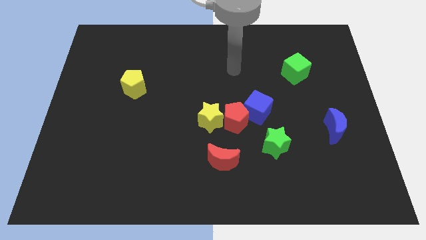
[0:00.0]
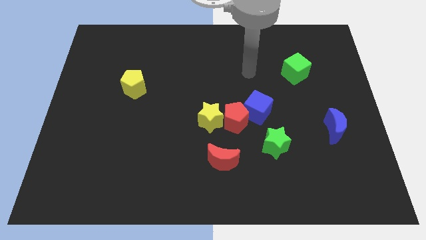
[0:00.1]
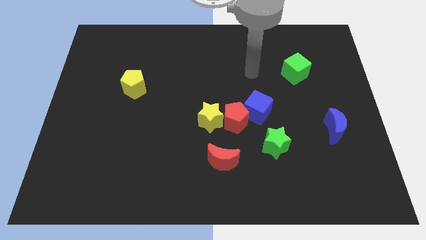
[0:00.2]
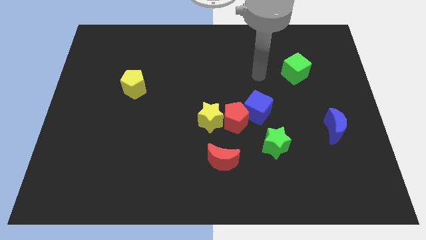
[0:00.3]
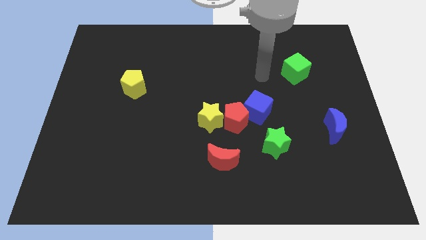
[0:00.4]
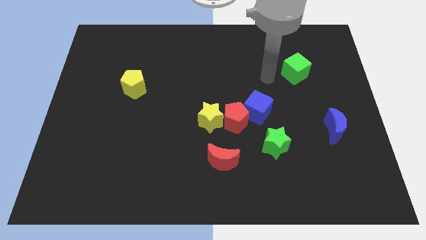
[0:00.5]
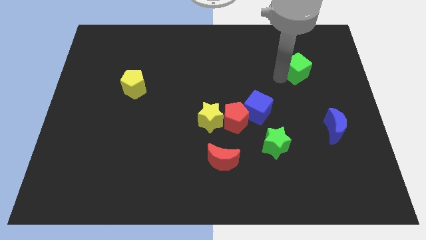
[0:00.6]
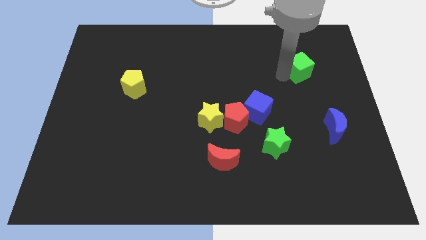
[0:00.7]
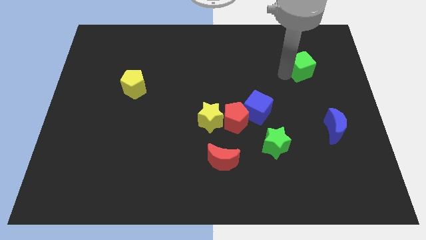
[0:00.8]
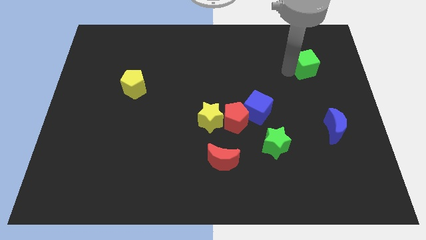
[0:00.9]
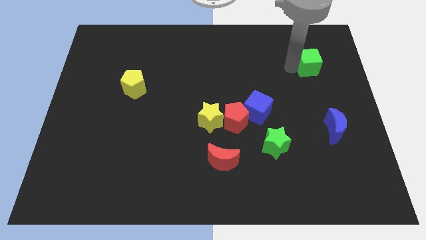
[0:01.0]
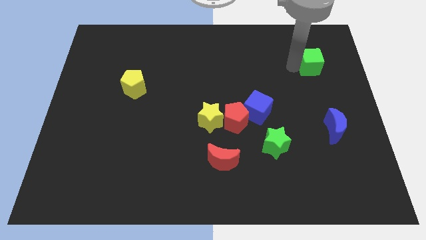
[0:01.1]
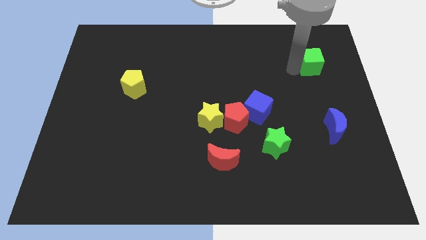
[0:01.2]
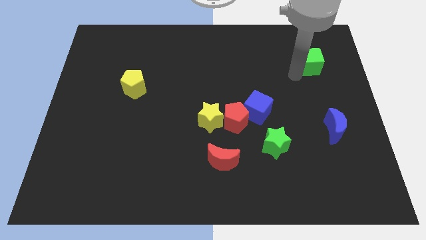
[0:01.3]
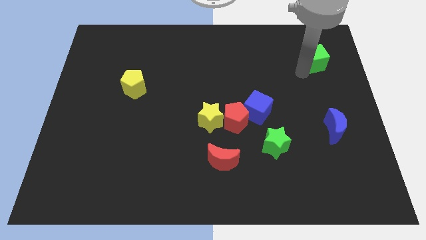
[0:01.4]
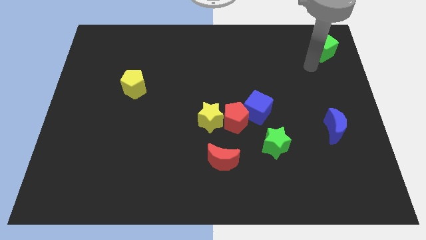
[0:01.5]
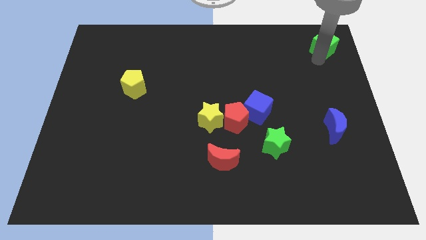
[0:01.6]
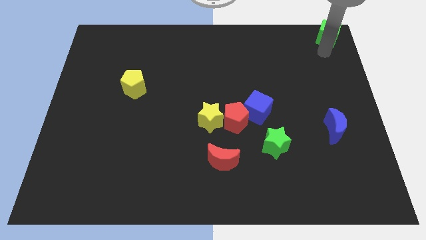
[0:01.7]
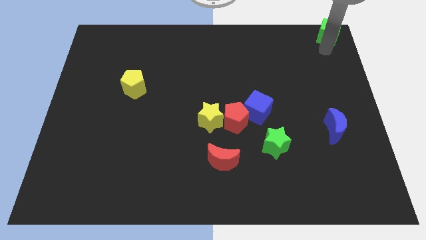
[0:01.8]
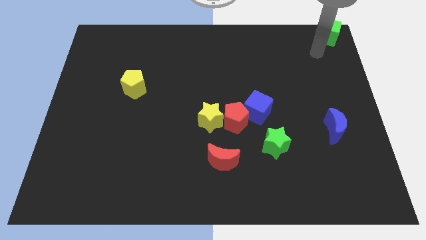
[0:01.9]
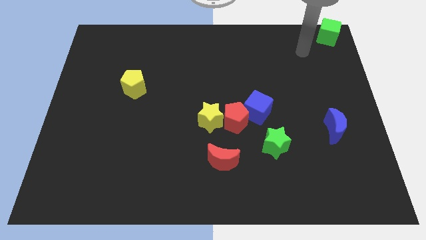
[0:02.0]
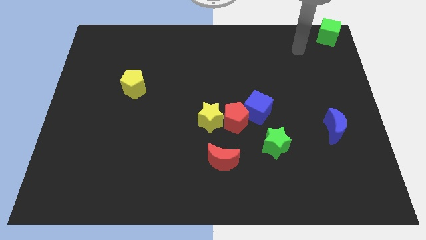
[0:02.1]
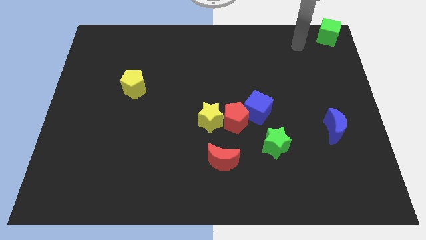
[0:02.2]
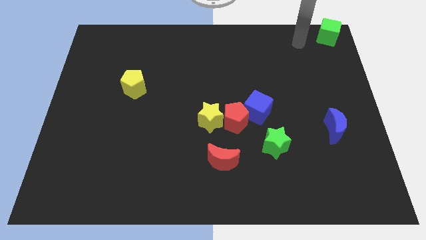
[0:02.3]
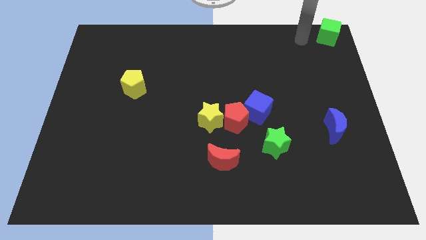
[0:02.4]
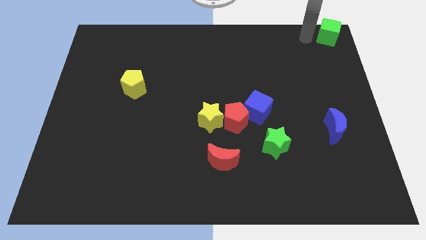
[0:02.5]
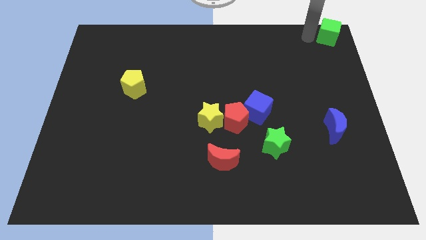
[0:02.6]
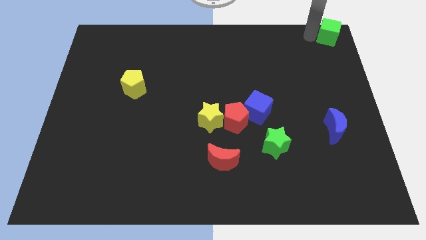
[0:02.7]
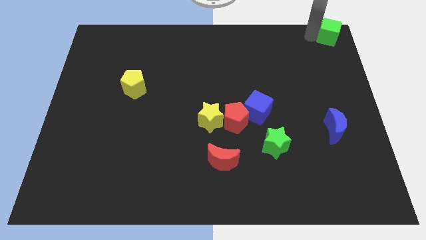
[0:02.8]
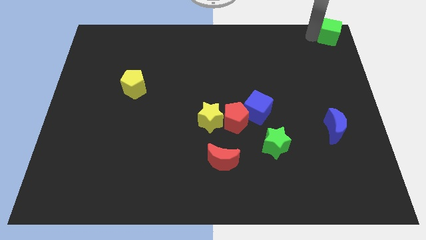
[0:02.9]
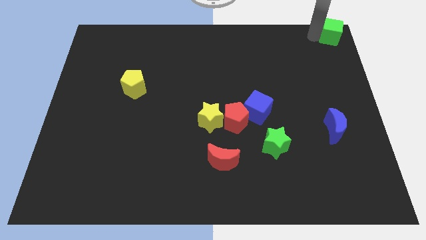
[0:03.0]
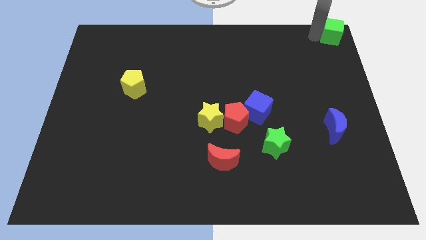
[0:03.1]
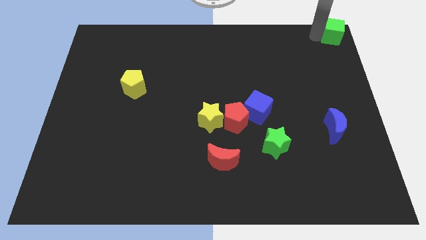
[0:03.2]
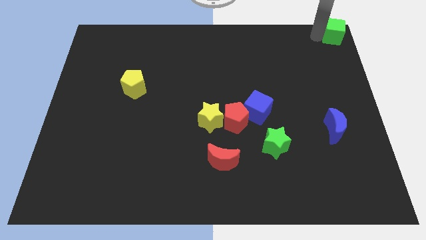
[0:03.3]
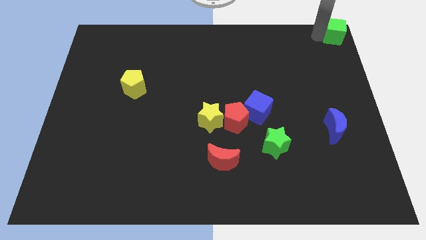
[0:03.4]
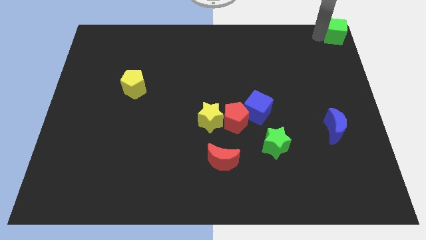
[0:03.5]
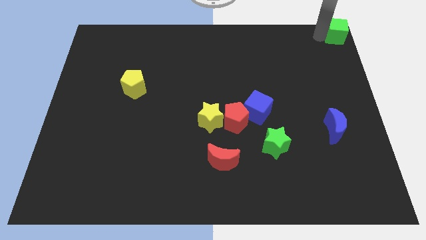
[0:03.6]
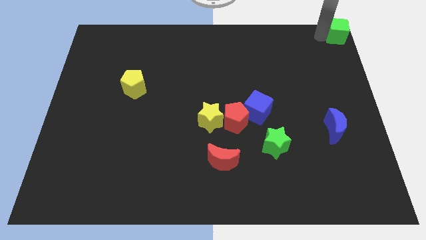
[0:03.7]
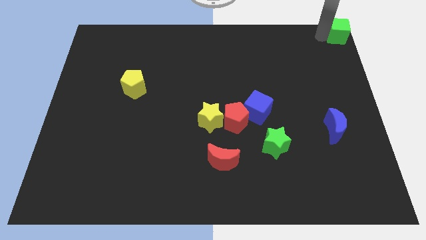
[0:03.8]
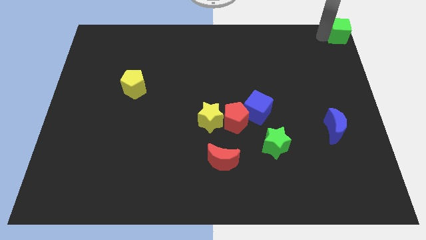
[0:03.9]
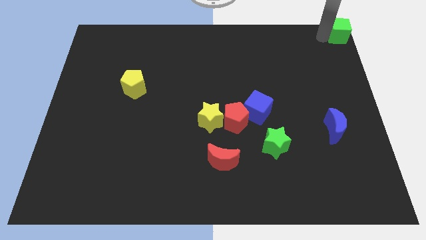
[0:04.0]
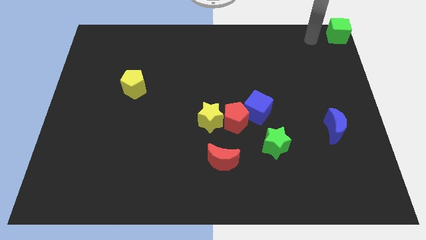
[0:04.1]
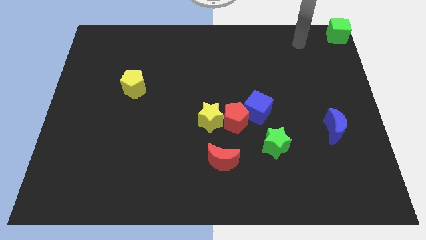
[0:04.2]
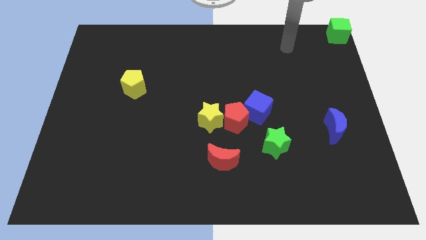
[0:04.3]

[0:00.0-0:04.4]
push the green cube to the top right corner of the board

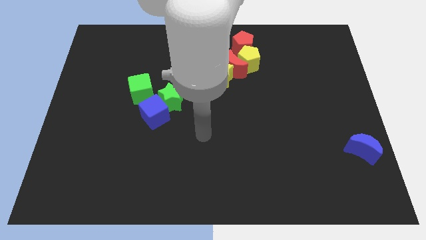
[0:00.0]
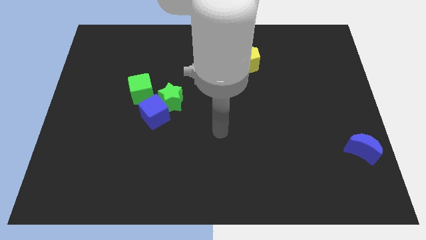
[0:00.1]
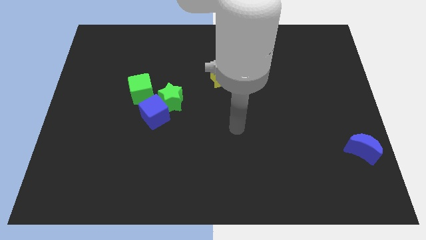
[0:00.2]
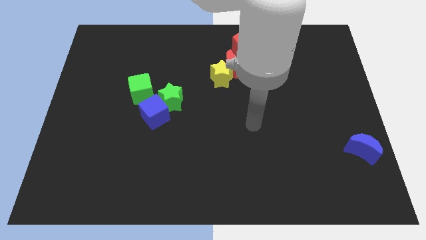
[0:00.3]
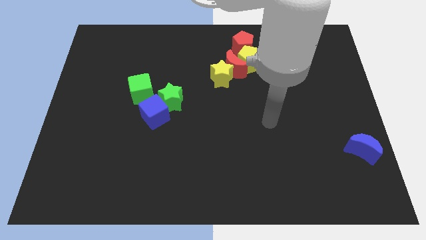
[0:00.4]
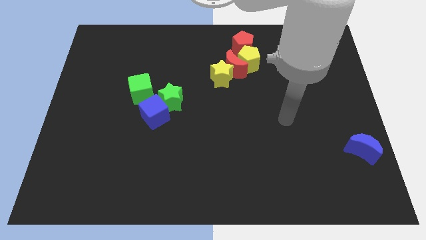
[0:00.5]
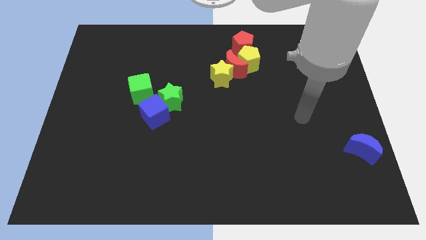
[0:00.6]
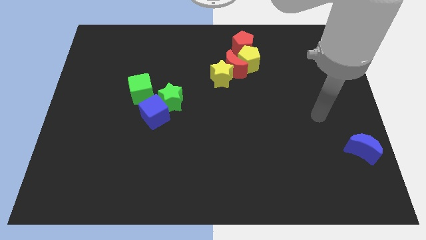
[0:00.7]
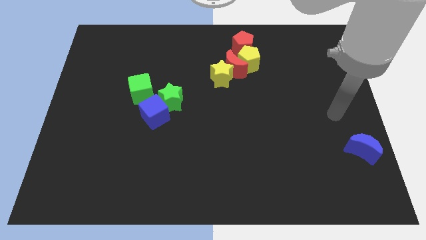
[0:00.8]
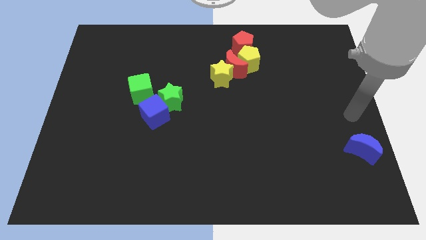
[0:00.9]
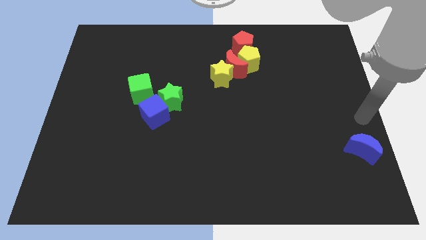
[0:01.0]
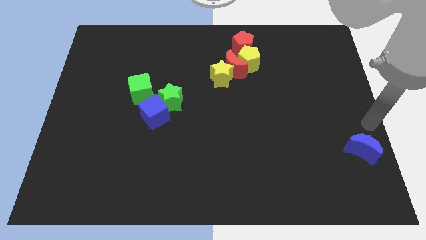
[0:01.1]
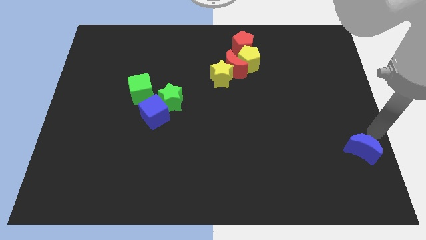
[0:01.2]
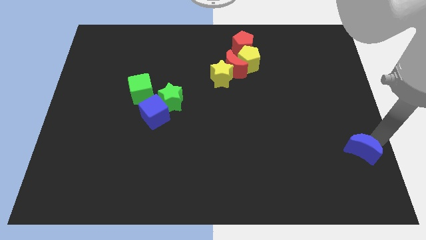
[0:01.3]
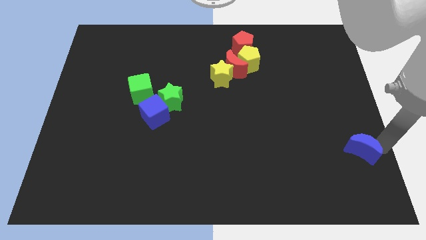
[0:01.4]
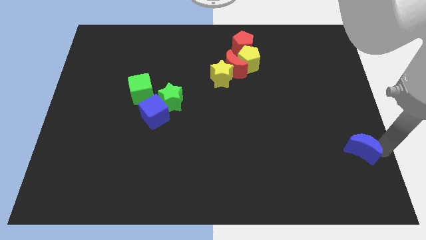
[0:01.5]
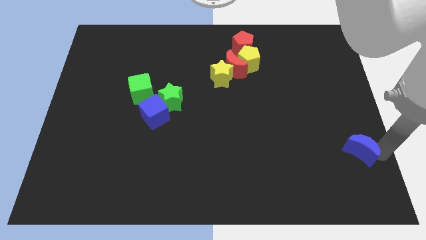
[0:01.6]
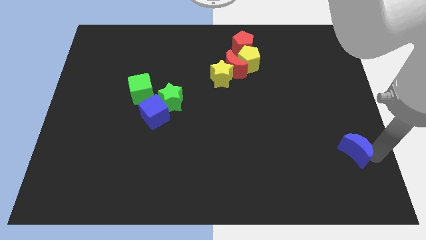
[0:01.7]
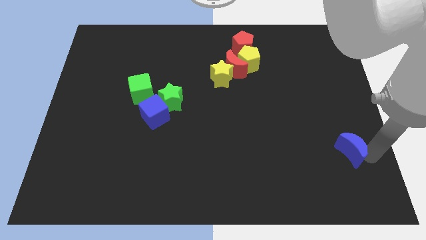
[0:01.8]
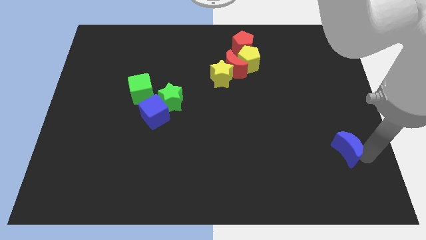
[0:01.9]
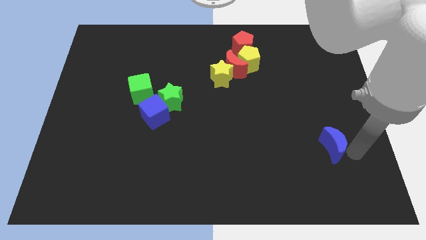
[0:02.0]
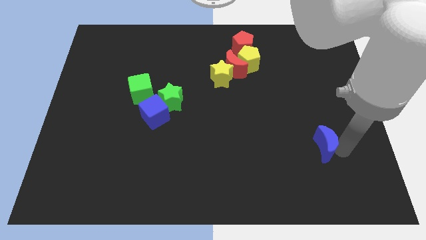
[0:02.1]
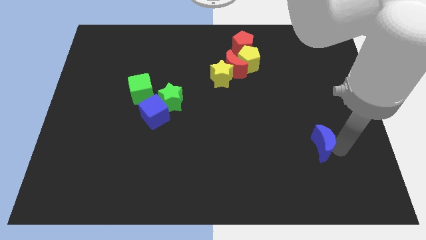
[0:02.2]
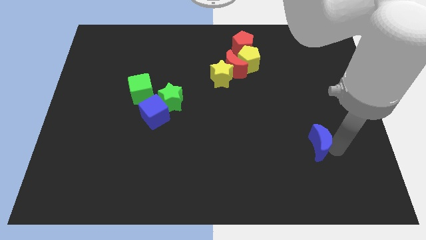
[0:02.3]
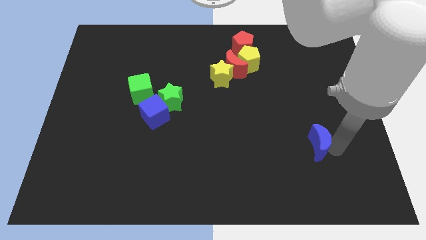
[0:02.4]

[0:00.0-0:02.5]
move the blue moon to the bottom center

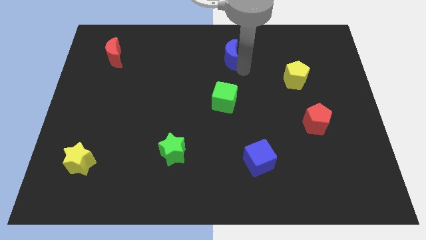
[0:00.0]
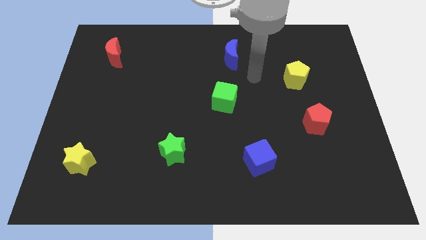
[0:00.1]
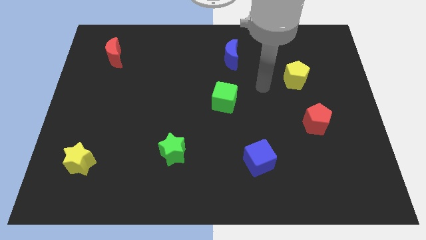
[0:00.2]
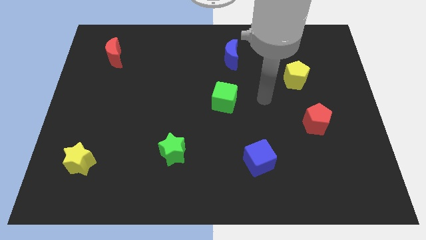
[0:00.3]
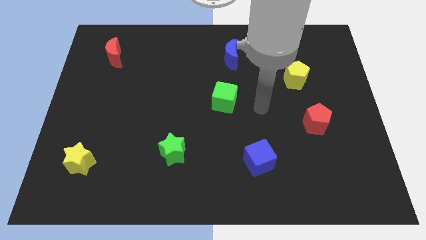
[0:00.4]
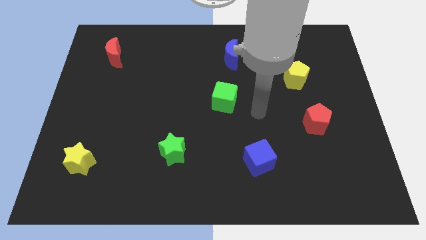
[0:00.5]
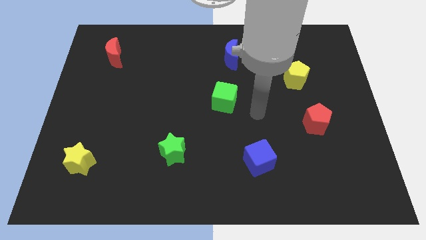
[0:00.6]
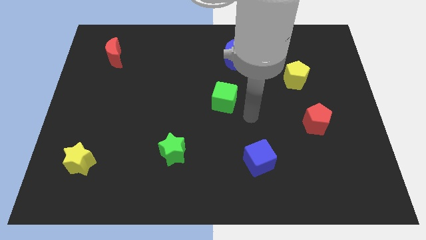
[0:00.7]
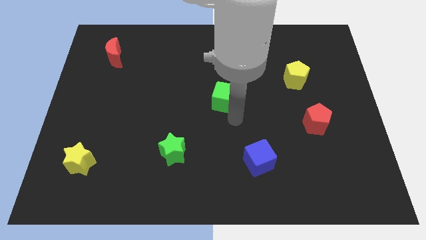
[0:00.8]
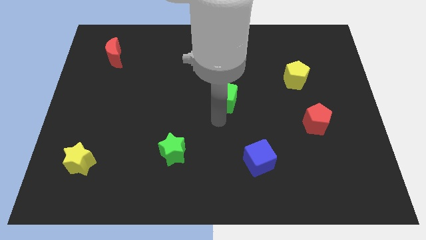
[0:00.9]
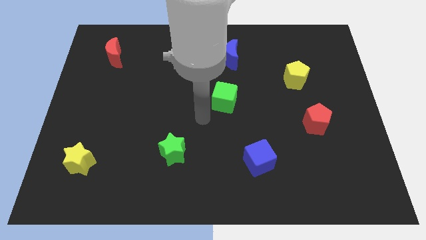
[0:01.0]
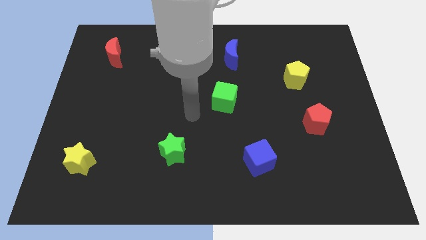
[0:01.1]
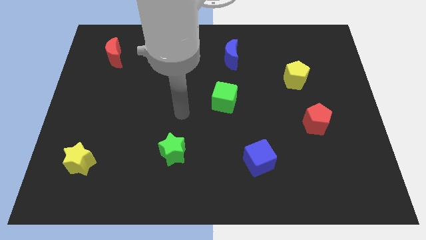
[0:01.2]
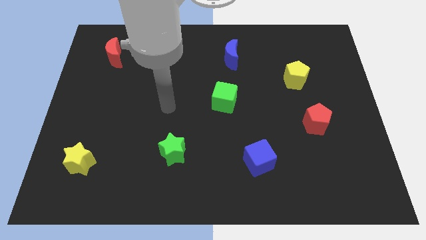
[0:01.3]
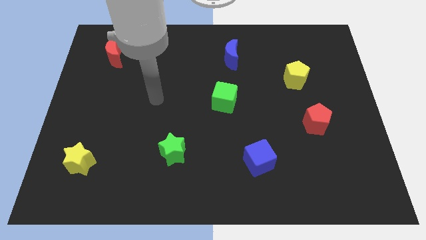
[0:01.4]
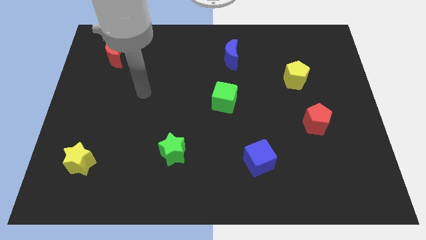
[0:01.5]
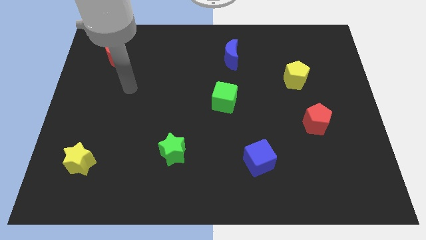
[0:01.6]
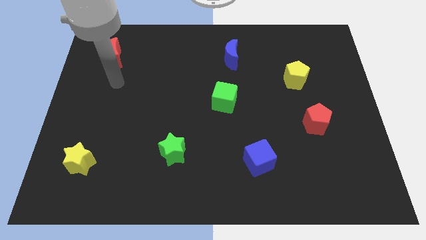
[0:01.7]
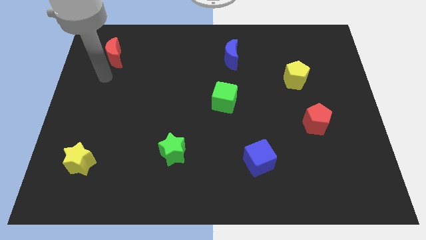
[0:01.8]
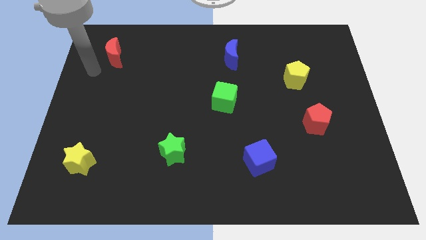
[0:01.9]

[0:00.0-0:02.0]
point your arm below red moon
